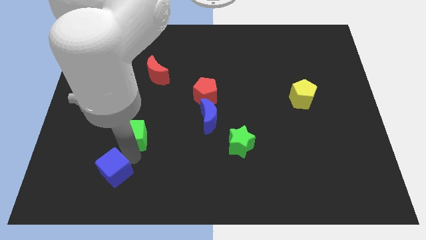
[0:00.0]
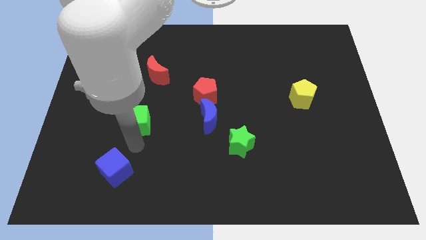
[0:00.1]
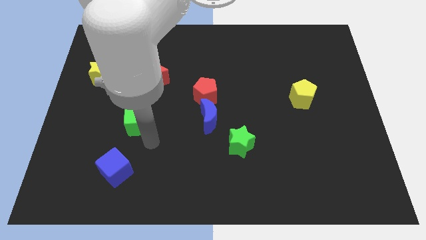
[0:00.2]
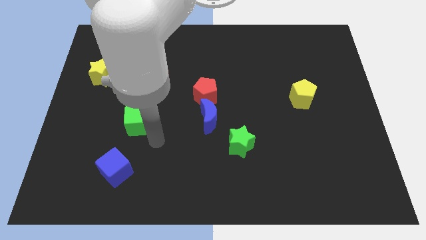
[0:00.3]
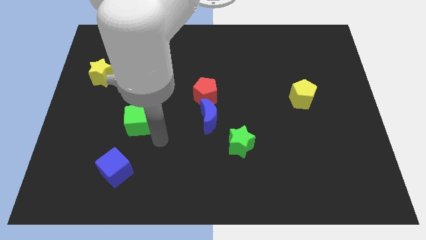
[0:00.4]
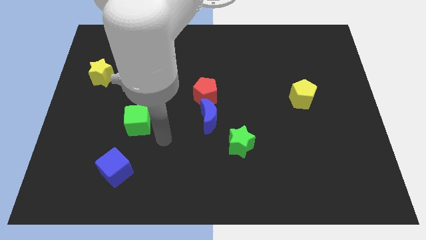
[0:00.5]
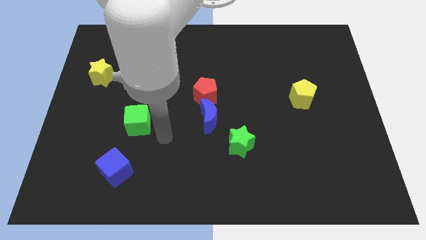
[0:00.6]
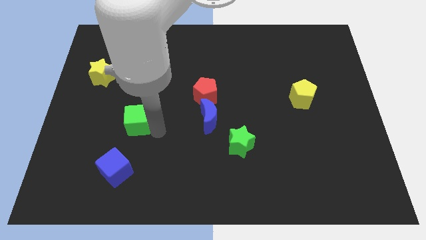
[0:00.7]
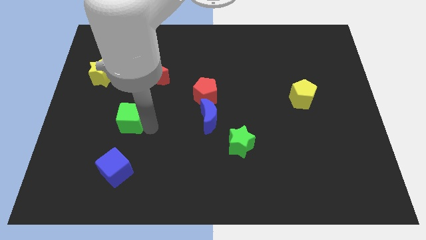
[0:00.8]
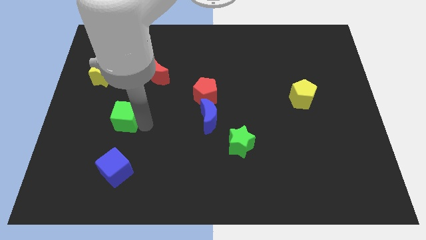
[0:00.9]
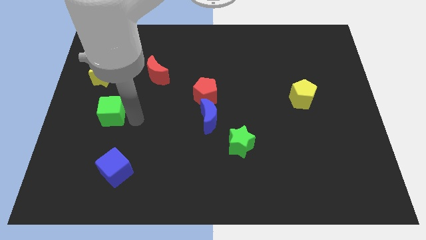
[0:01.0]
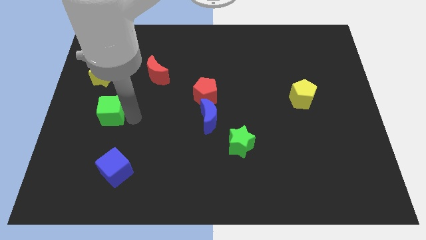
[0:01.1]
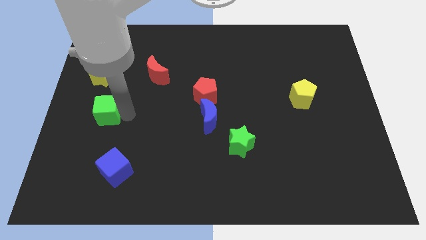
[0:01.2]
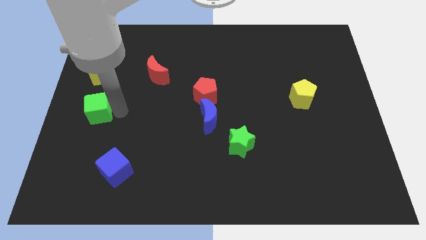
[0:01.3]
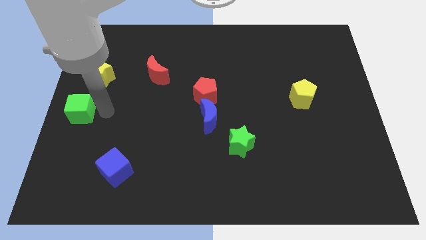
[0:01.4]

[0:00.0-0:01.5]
move the green cube to the bottom of the yellow star

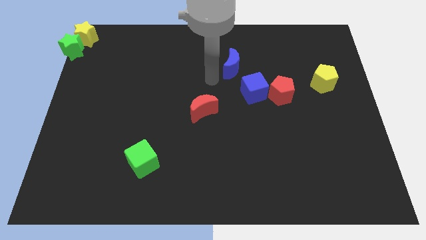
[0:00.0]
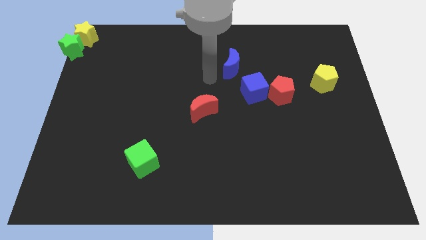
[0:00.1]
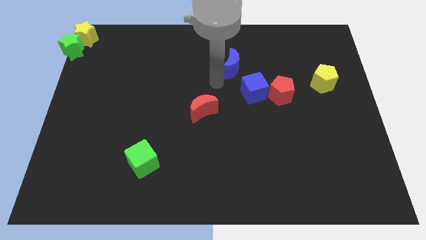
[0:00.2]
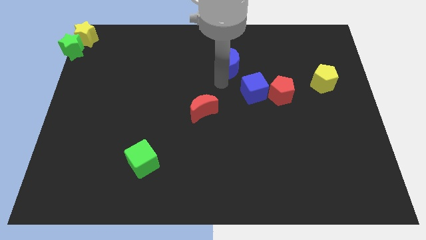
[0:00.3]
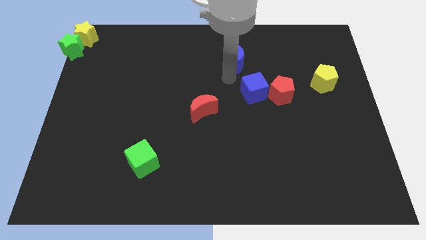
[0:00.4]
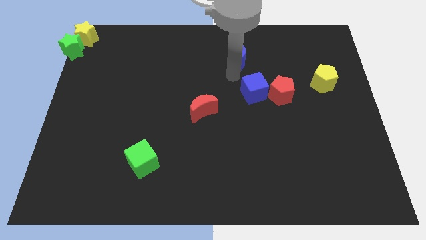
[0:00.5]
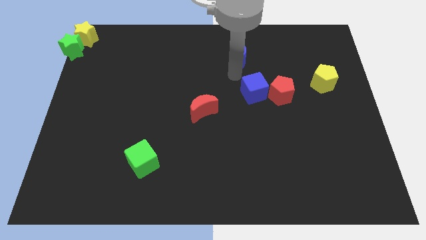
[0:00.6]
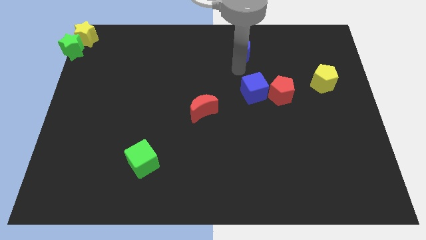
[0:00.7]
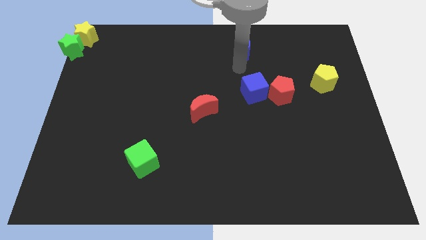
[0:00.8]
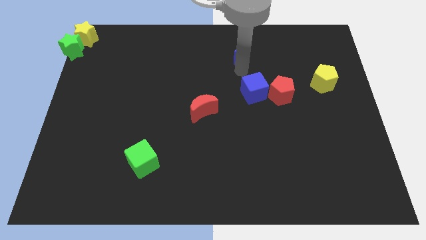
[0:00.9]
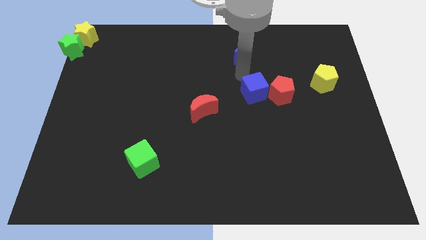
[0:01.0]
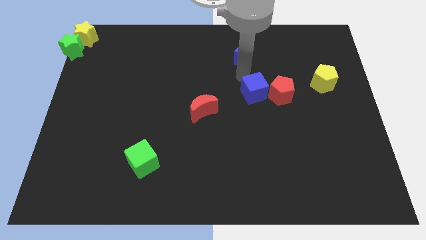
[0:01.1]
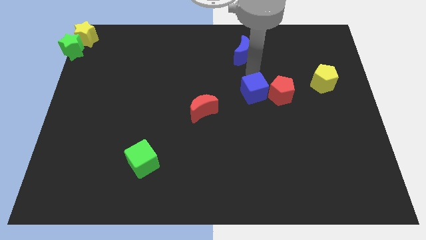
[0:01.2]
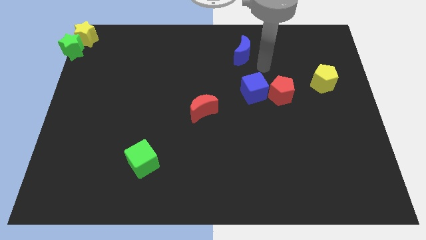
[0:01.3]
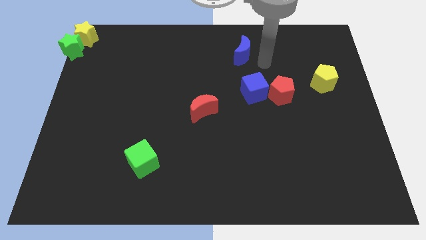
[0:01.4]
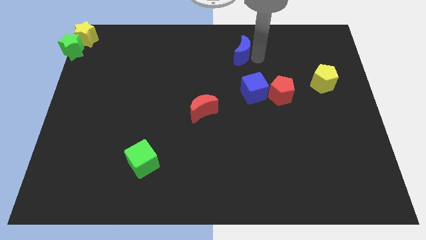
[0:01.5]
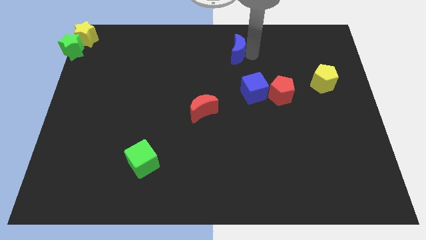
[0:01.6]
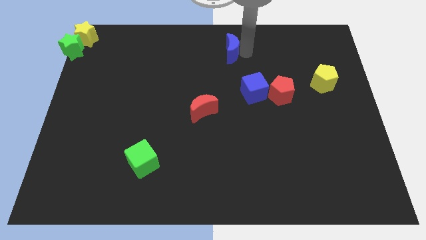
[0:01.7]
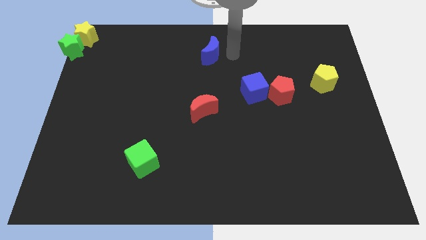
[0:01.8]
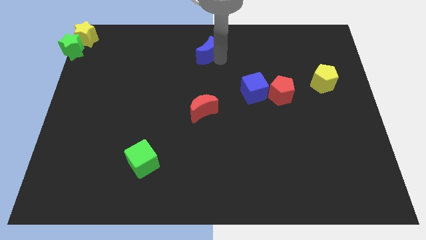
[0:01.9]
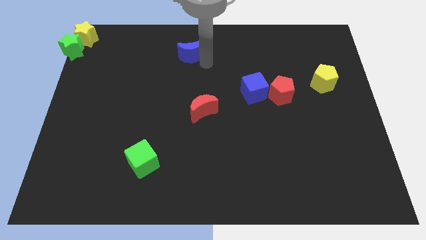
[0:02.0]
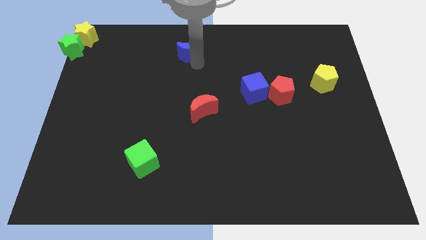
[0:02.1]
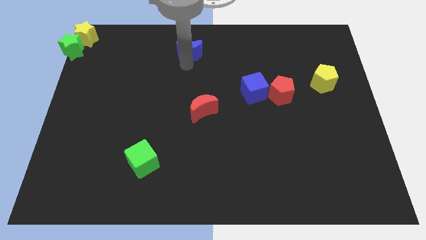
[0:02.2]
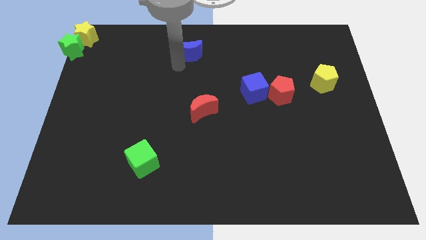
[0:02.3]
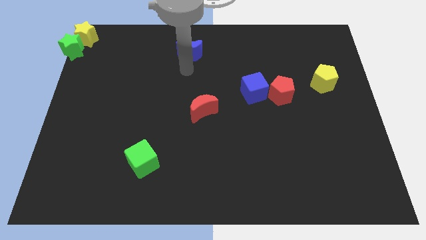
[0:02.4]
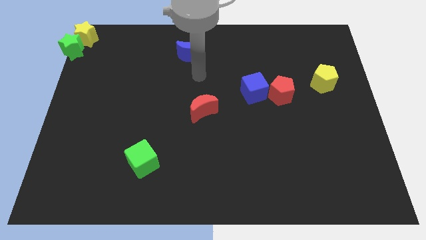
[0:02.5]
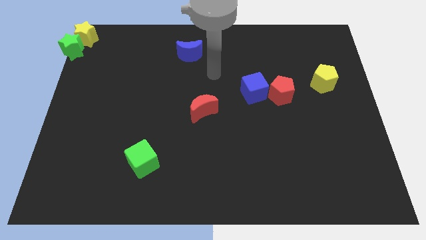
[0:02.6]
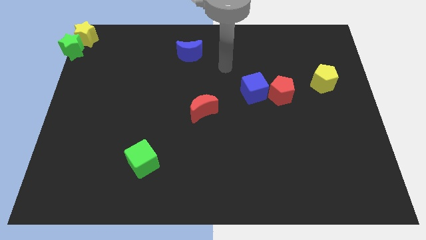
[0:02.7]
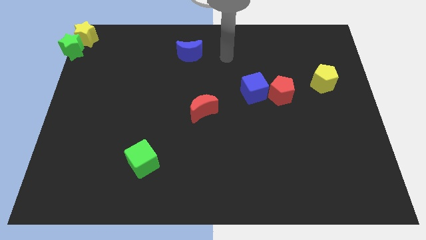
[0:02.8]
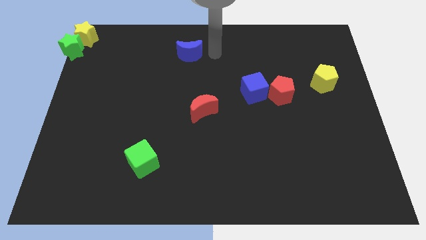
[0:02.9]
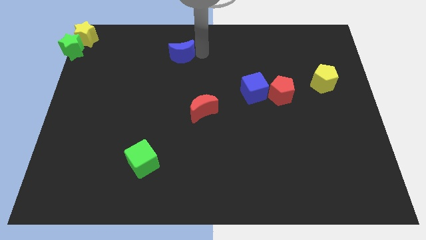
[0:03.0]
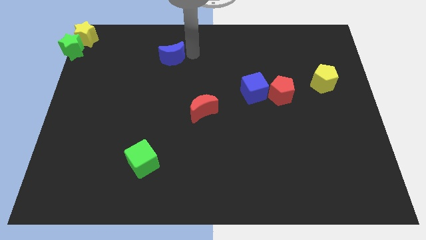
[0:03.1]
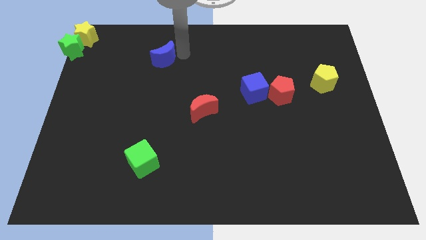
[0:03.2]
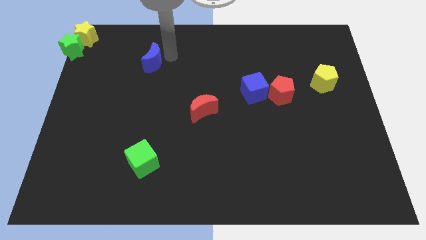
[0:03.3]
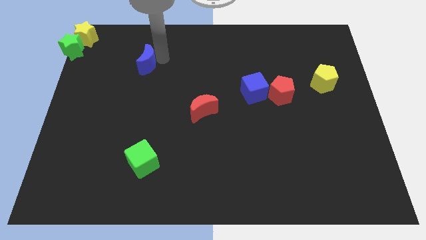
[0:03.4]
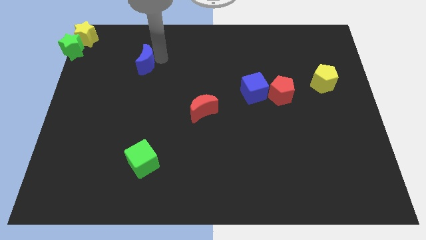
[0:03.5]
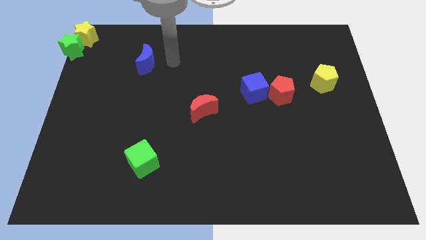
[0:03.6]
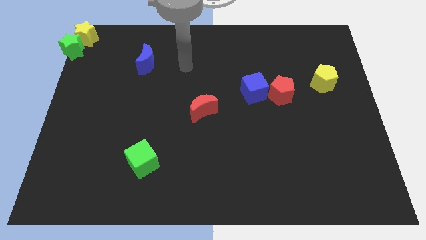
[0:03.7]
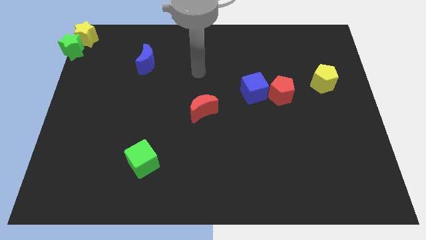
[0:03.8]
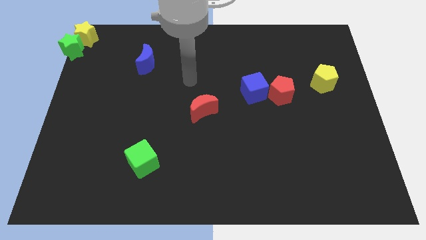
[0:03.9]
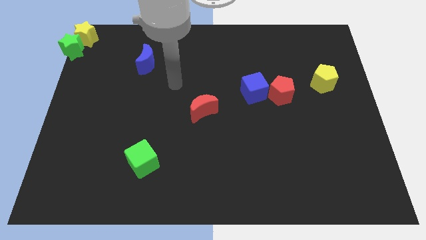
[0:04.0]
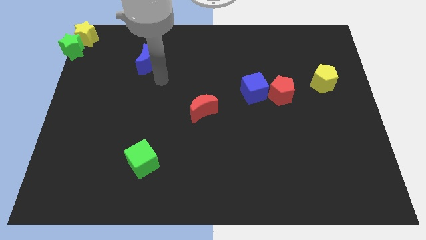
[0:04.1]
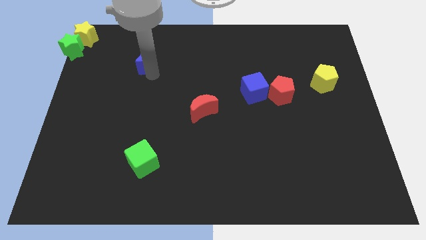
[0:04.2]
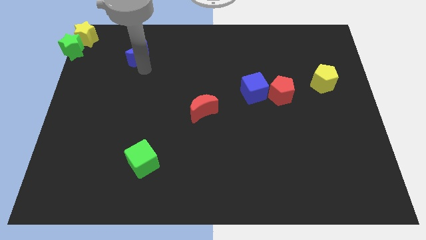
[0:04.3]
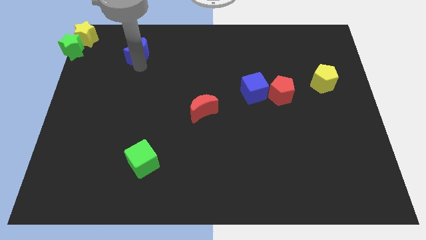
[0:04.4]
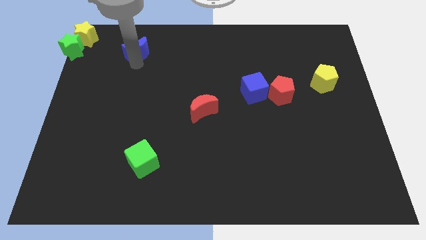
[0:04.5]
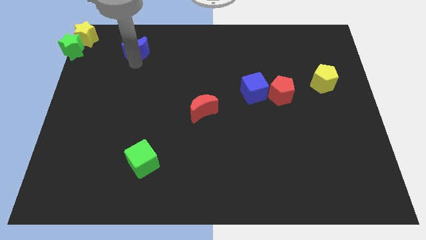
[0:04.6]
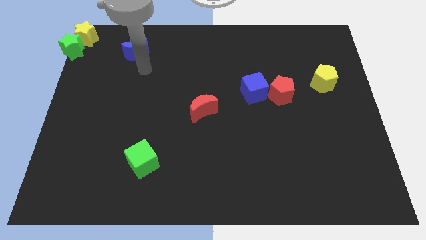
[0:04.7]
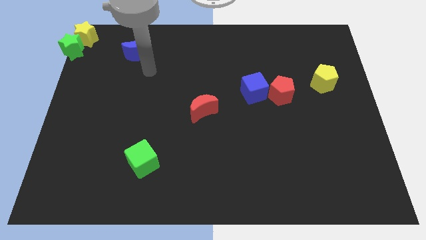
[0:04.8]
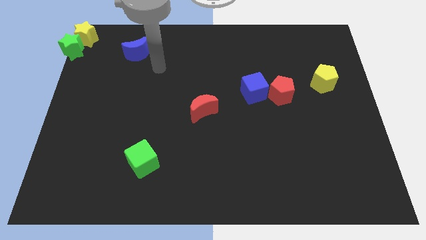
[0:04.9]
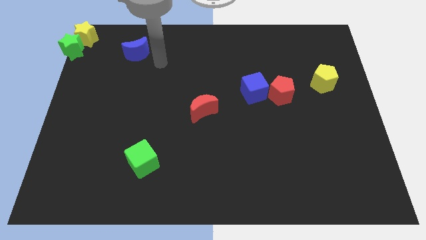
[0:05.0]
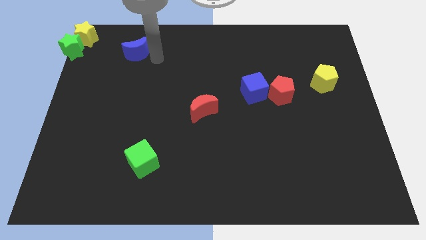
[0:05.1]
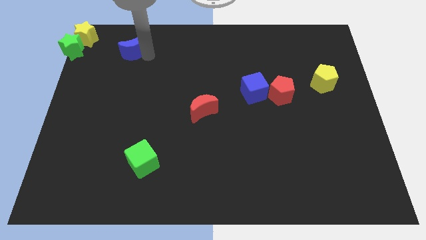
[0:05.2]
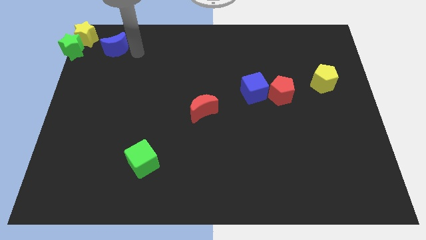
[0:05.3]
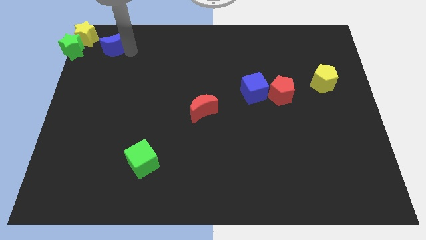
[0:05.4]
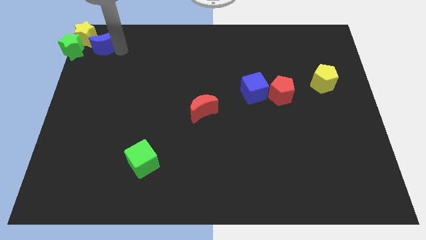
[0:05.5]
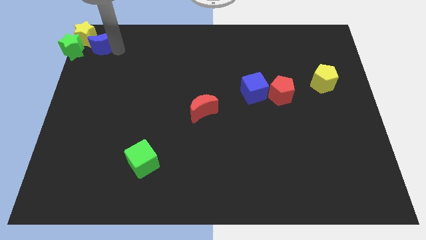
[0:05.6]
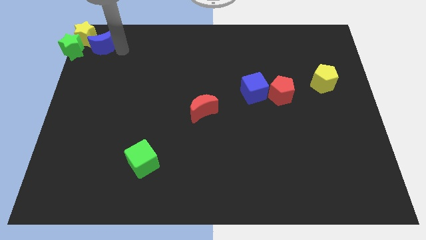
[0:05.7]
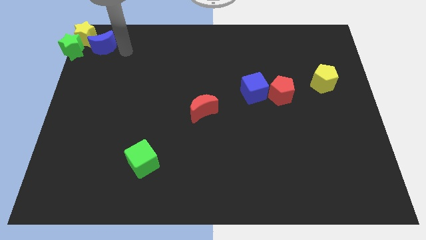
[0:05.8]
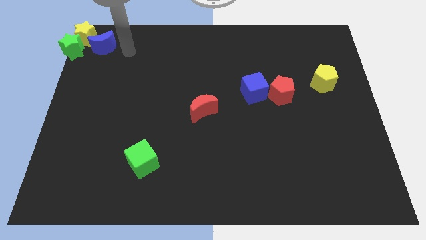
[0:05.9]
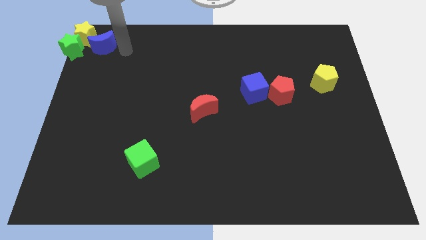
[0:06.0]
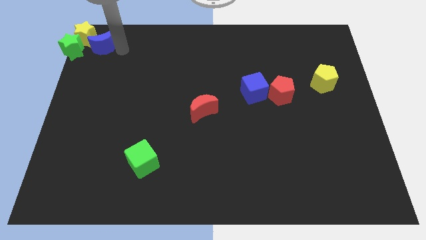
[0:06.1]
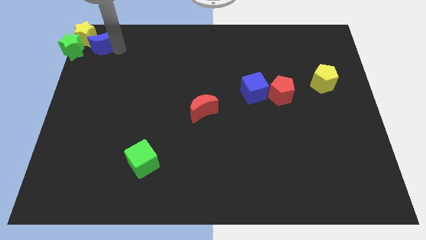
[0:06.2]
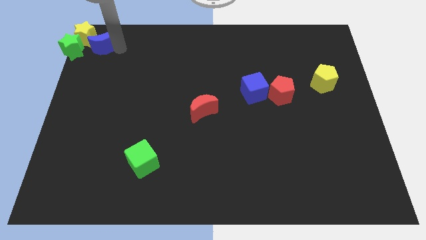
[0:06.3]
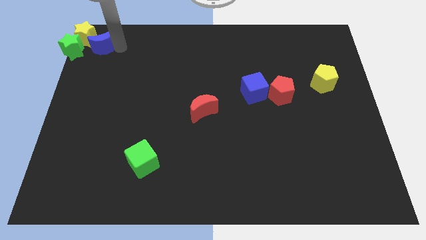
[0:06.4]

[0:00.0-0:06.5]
push the blue crescent towards the yellow star

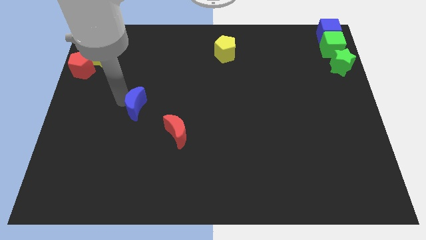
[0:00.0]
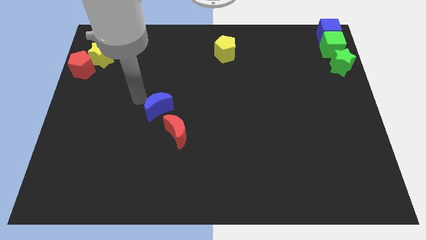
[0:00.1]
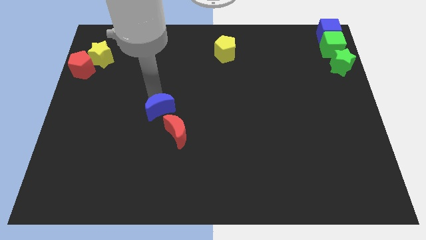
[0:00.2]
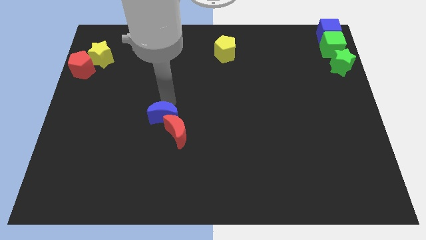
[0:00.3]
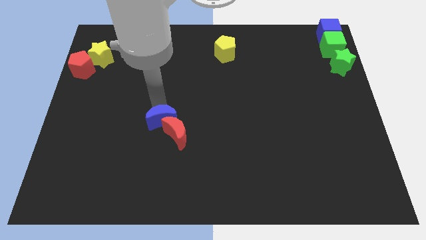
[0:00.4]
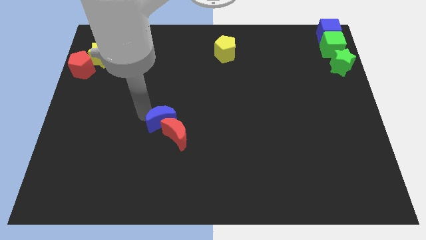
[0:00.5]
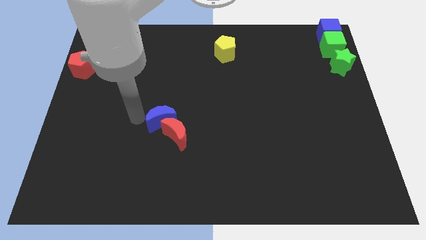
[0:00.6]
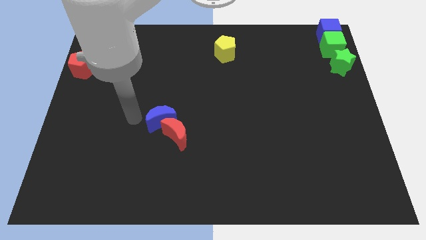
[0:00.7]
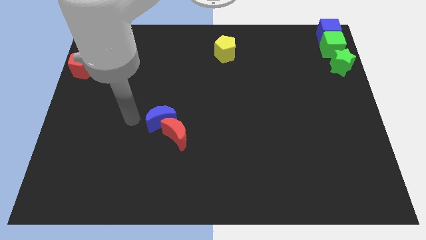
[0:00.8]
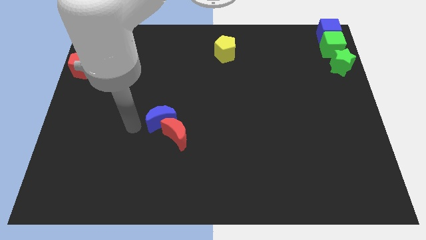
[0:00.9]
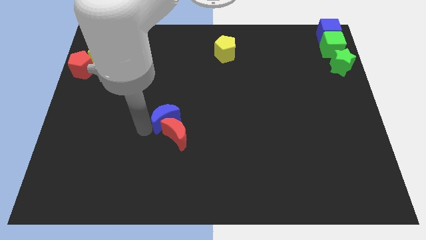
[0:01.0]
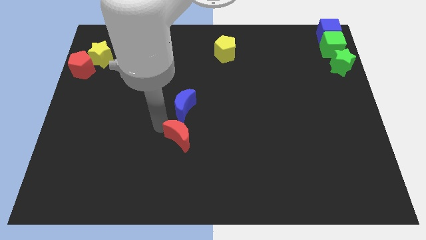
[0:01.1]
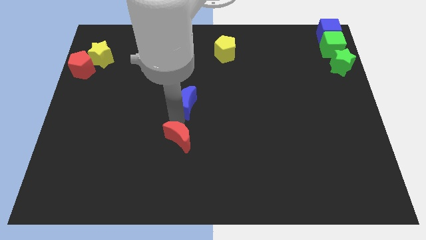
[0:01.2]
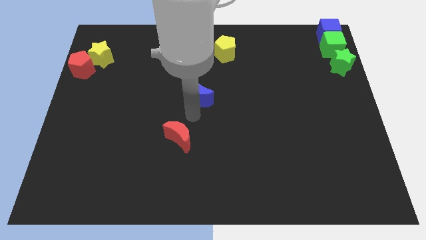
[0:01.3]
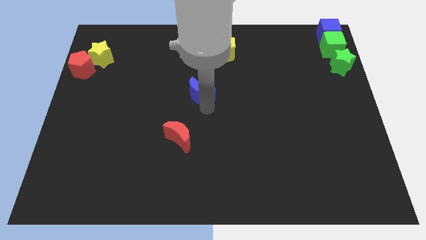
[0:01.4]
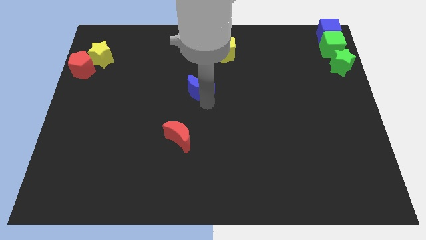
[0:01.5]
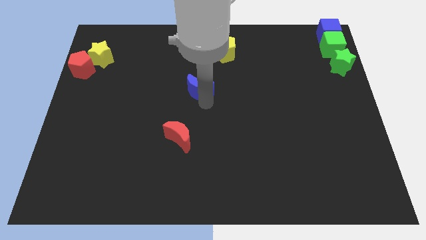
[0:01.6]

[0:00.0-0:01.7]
push the blue moon between the red moon and yellow pentagon
